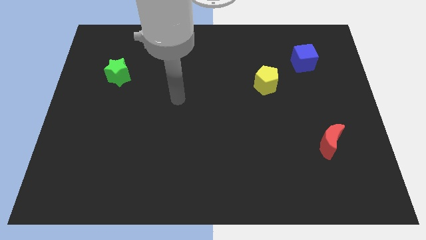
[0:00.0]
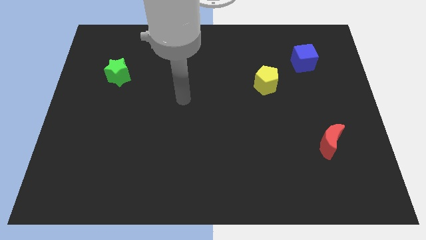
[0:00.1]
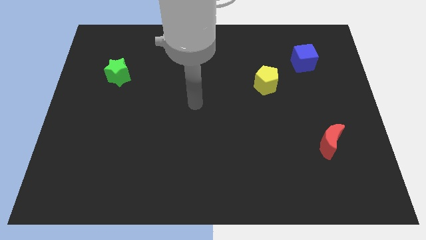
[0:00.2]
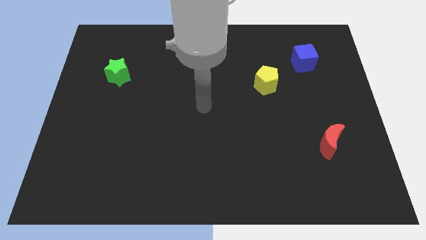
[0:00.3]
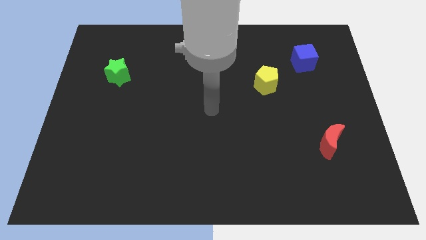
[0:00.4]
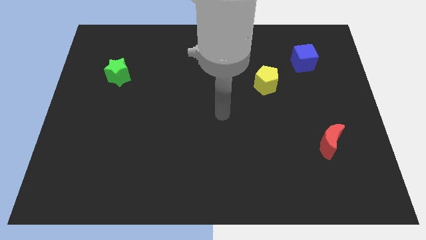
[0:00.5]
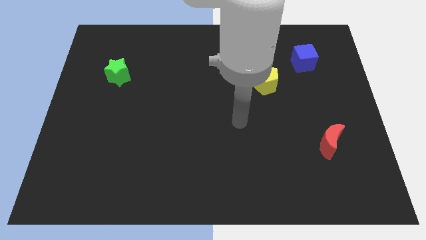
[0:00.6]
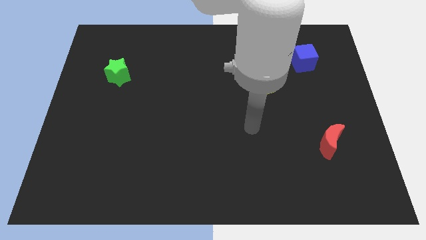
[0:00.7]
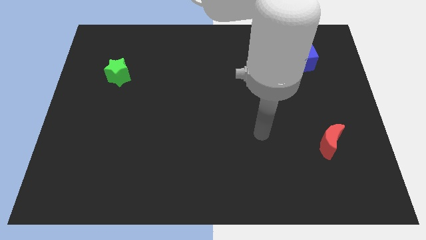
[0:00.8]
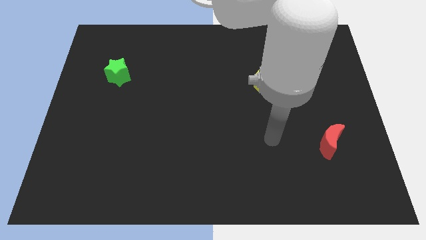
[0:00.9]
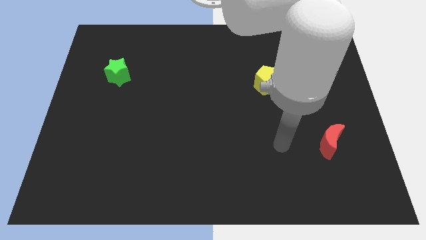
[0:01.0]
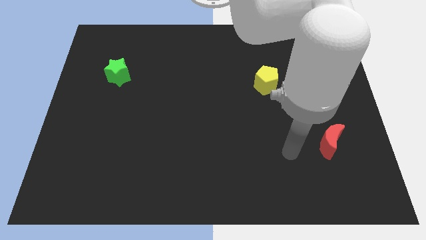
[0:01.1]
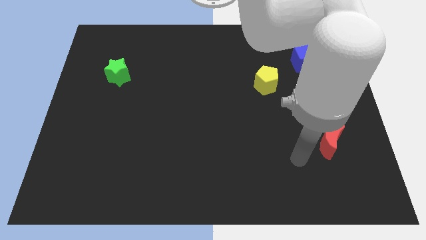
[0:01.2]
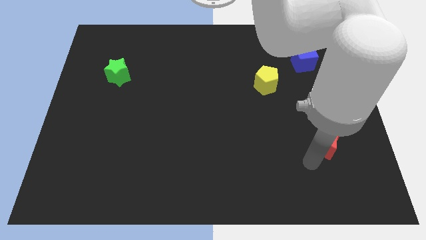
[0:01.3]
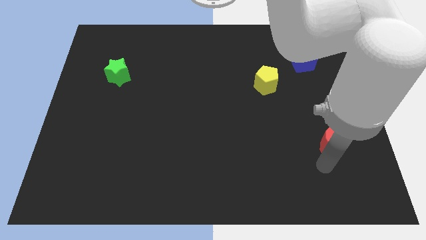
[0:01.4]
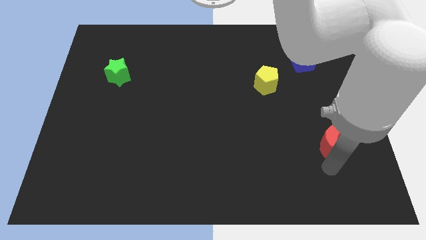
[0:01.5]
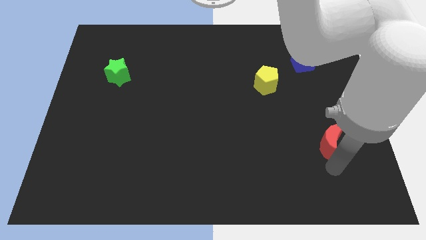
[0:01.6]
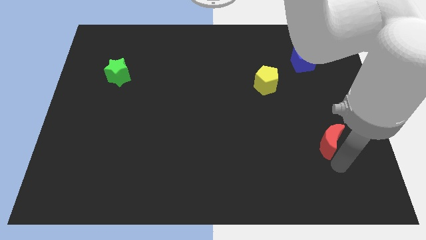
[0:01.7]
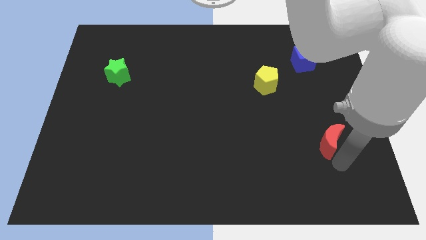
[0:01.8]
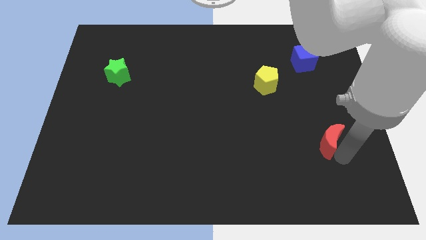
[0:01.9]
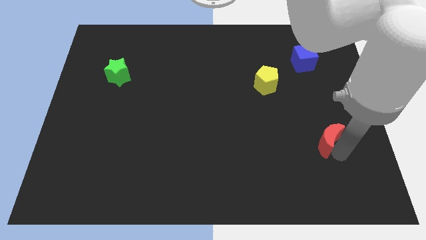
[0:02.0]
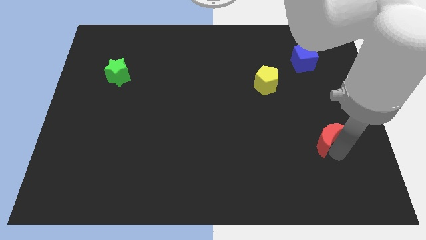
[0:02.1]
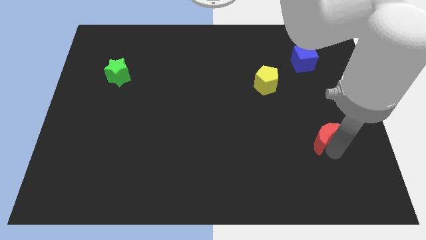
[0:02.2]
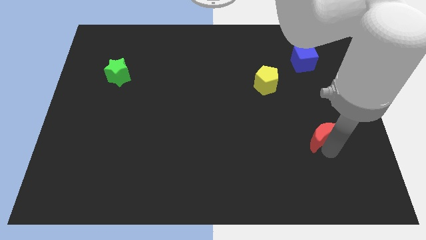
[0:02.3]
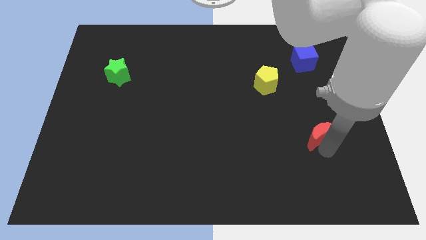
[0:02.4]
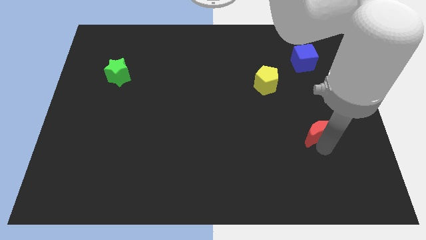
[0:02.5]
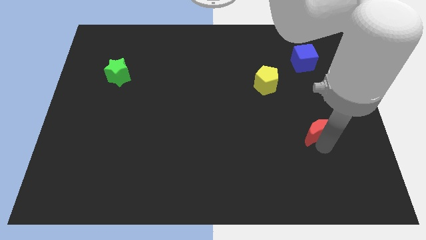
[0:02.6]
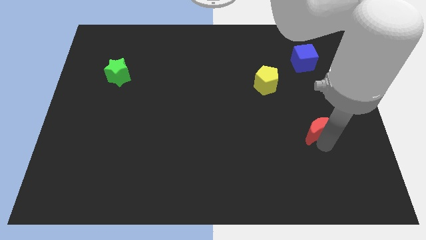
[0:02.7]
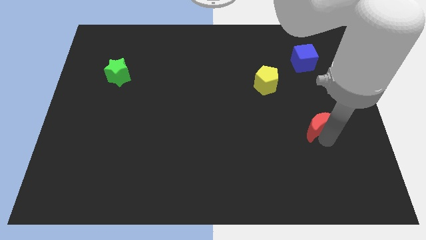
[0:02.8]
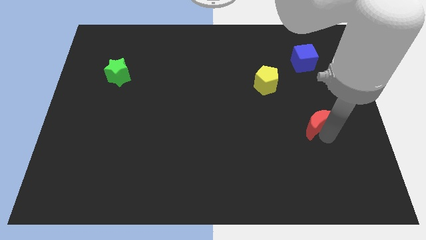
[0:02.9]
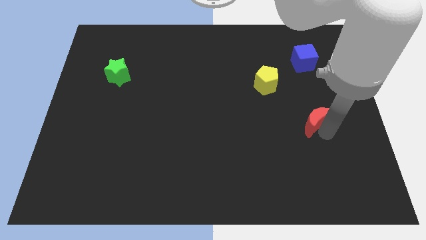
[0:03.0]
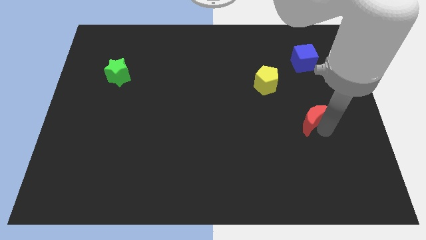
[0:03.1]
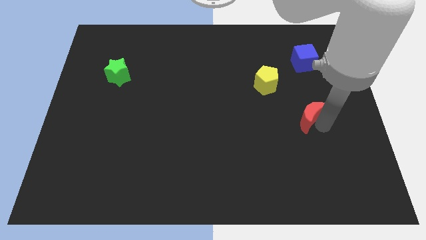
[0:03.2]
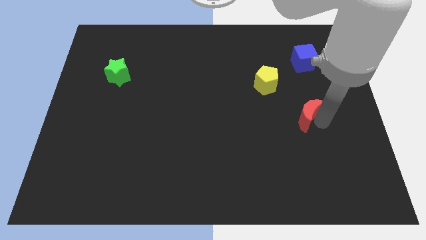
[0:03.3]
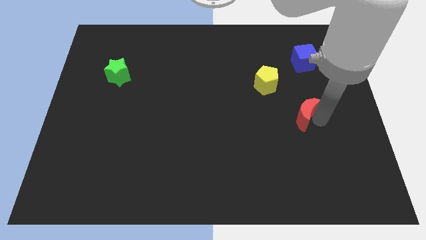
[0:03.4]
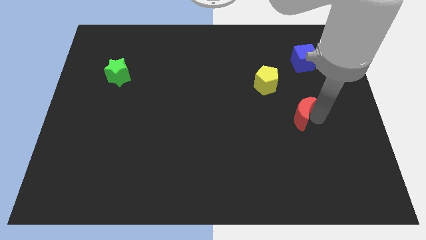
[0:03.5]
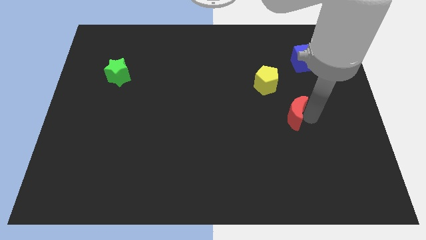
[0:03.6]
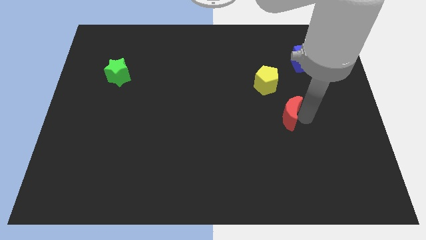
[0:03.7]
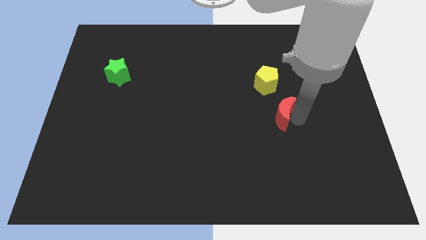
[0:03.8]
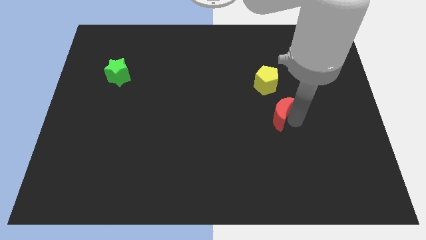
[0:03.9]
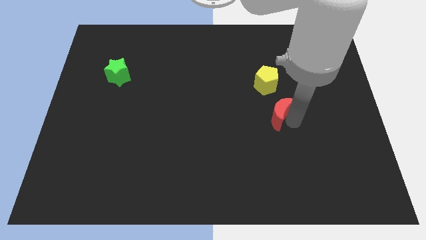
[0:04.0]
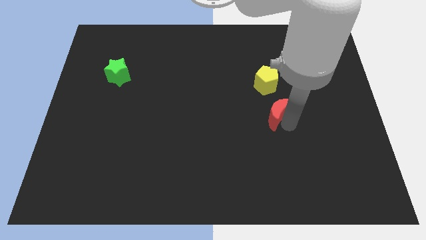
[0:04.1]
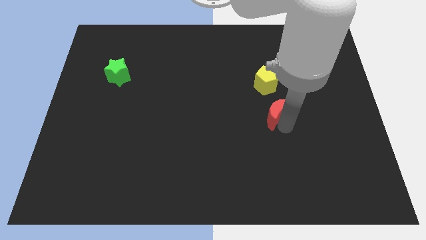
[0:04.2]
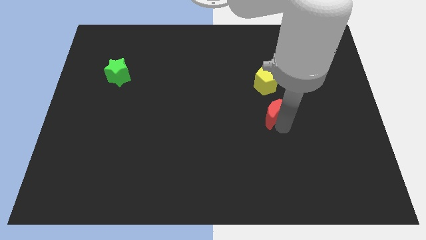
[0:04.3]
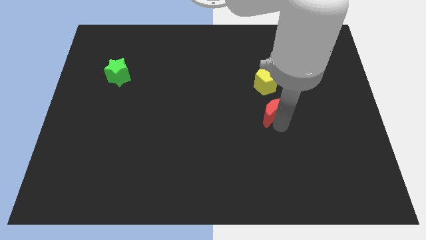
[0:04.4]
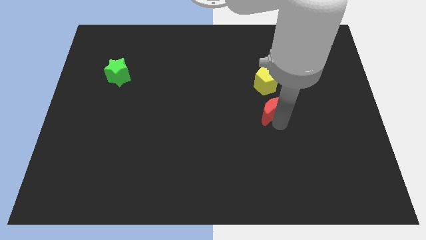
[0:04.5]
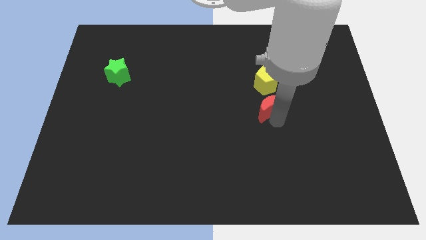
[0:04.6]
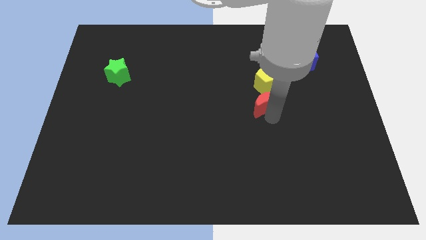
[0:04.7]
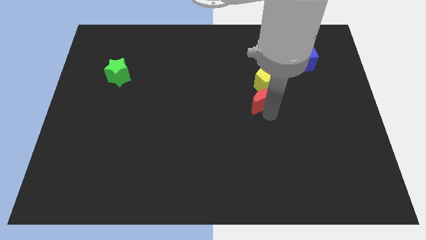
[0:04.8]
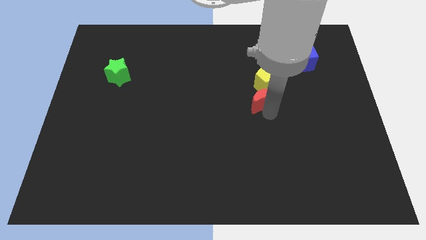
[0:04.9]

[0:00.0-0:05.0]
slide the moon towards the yellow block

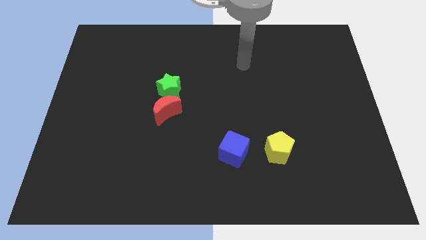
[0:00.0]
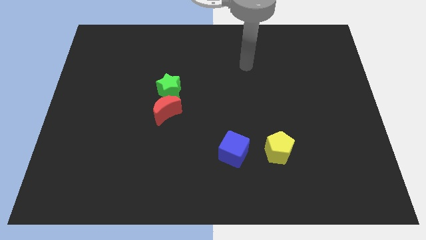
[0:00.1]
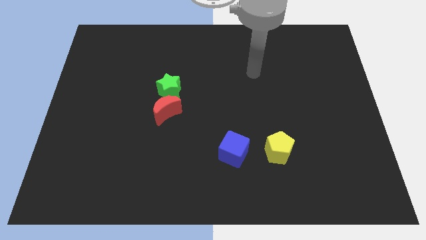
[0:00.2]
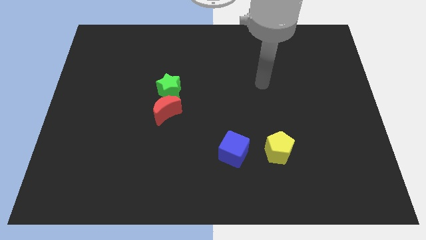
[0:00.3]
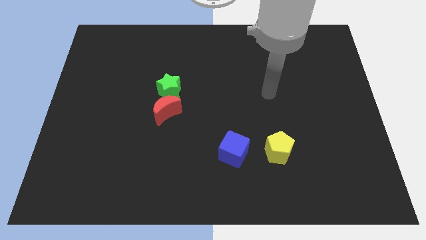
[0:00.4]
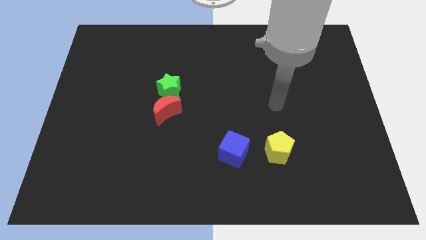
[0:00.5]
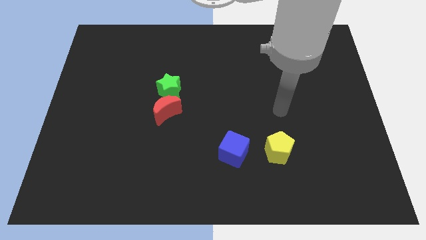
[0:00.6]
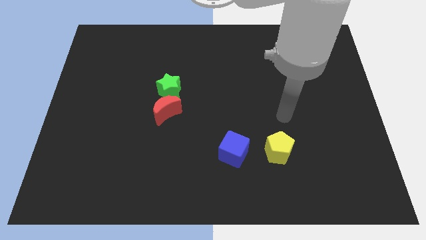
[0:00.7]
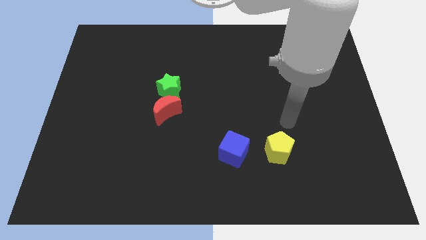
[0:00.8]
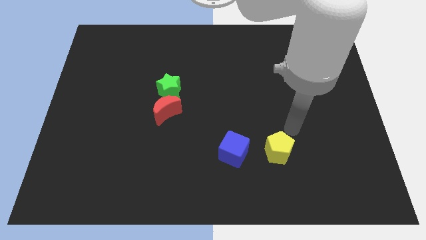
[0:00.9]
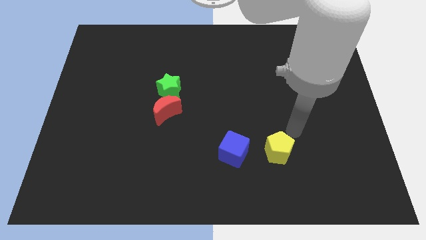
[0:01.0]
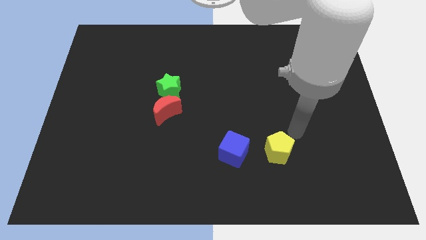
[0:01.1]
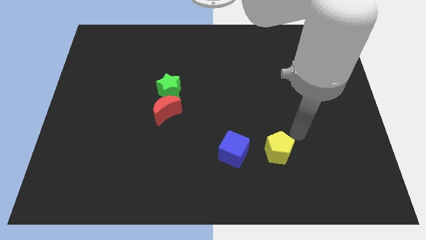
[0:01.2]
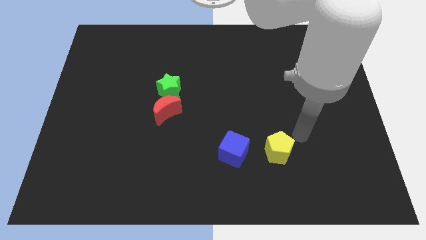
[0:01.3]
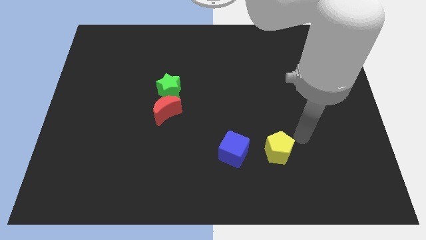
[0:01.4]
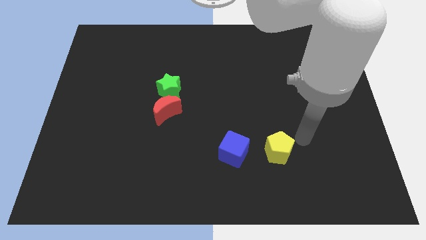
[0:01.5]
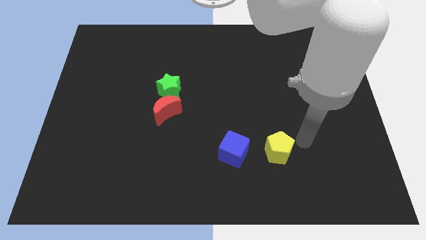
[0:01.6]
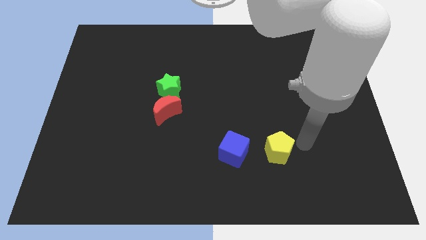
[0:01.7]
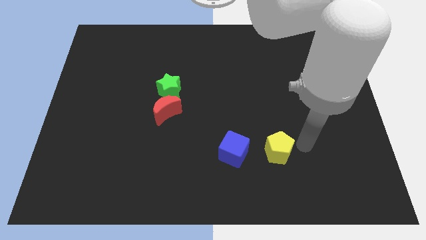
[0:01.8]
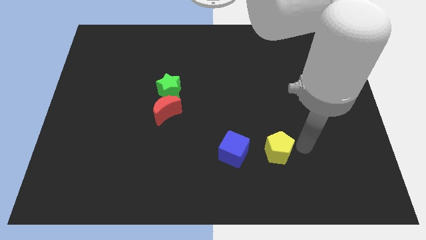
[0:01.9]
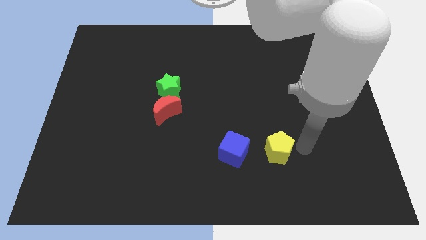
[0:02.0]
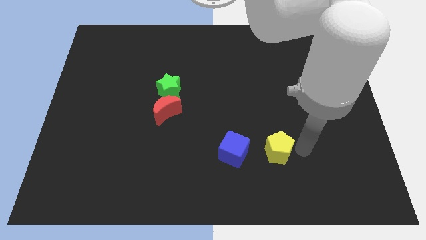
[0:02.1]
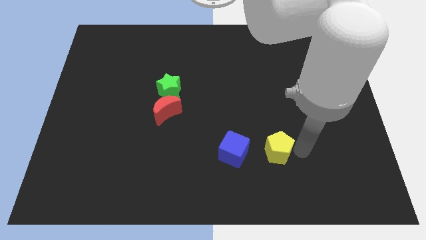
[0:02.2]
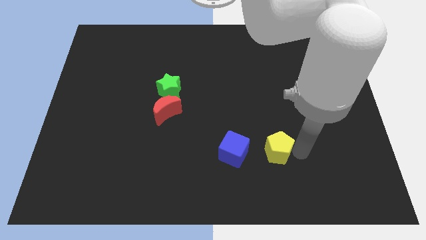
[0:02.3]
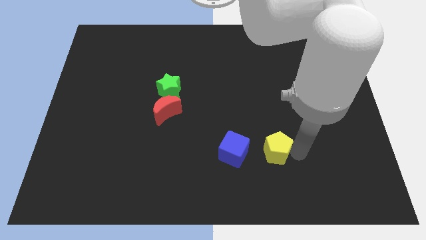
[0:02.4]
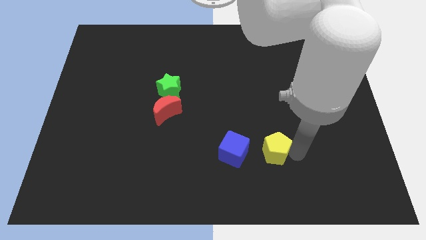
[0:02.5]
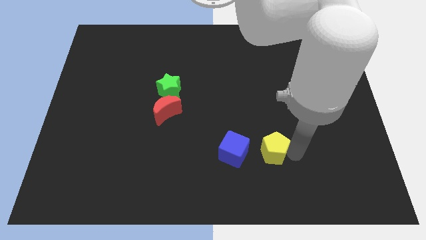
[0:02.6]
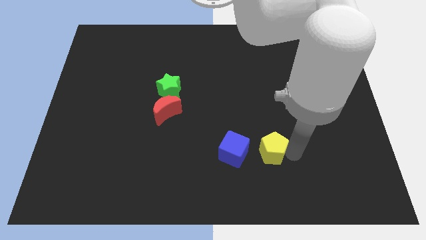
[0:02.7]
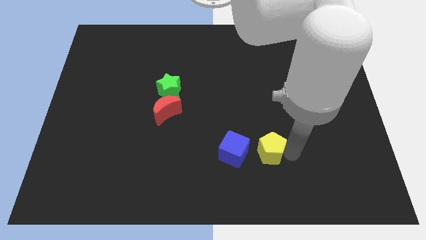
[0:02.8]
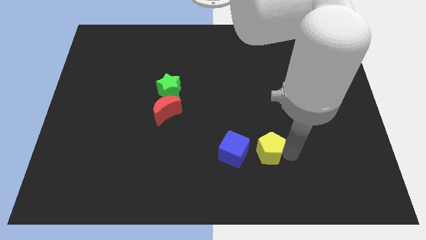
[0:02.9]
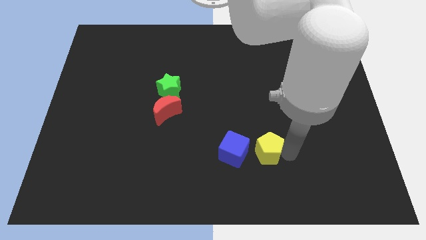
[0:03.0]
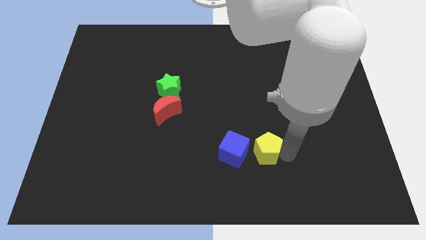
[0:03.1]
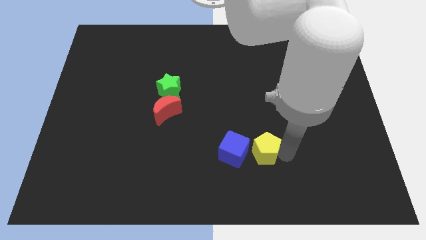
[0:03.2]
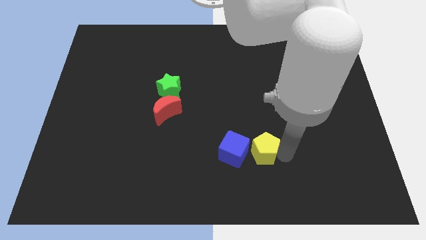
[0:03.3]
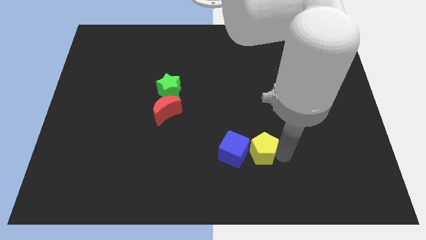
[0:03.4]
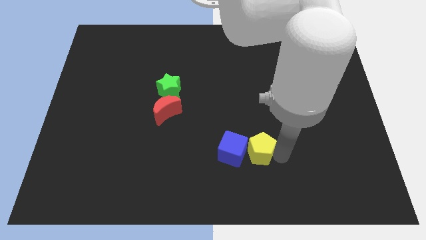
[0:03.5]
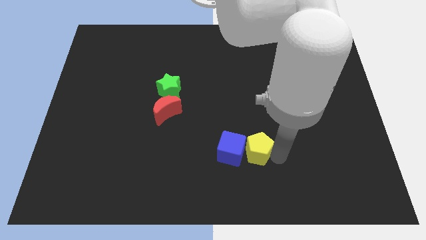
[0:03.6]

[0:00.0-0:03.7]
put the pentagon next to the blue block

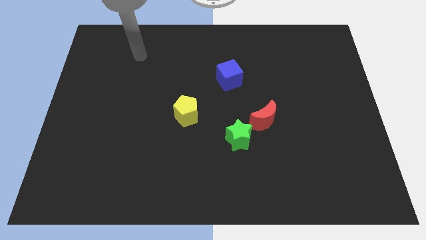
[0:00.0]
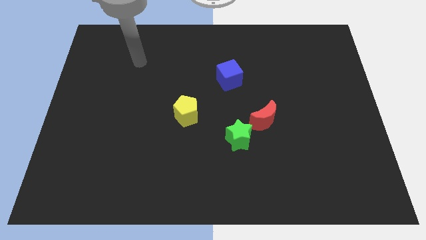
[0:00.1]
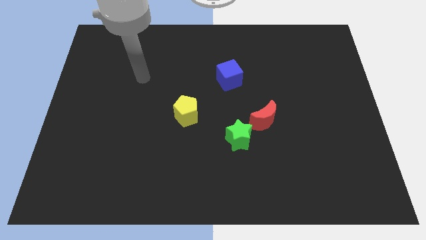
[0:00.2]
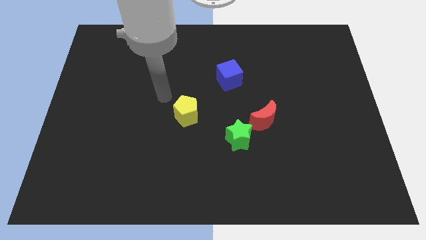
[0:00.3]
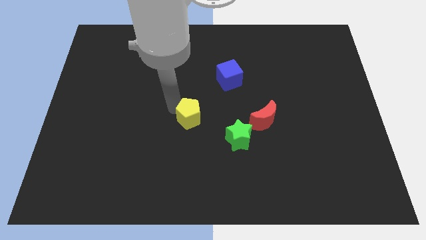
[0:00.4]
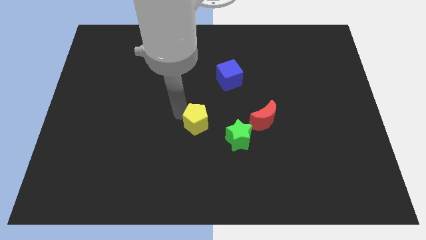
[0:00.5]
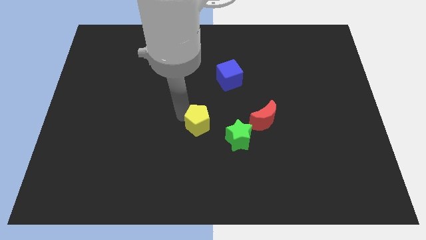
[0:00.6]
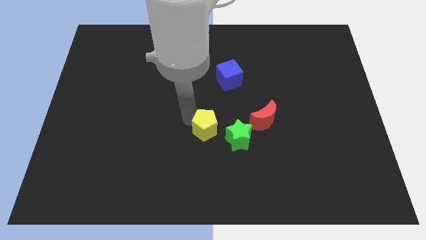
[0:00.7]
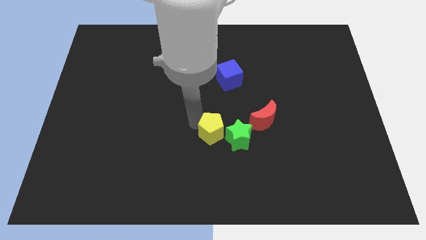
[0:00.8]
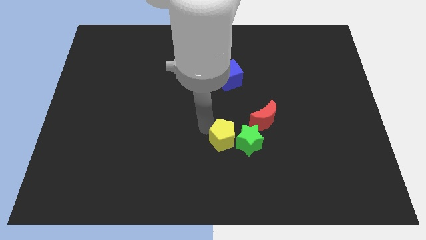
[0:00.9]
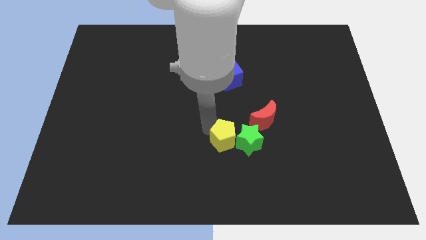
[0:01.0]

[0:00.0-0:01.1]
move the yellow pentagon close to the green star
